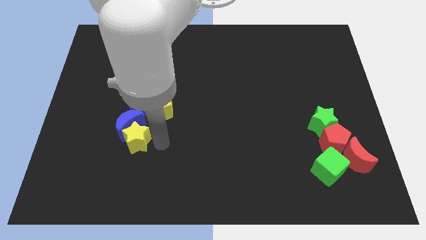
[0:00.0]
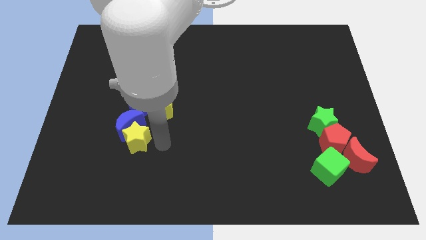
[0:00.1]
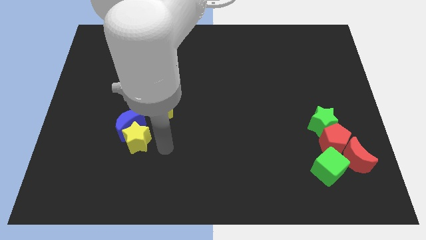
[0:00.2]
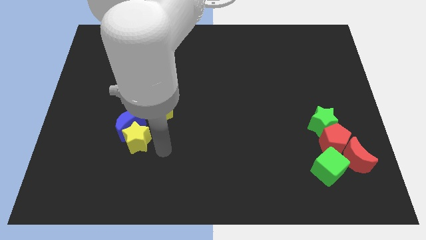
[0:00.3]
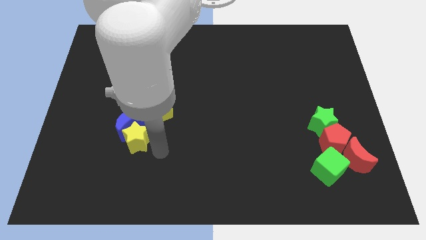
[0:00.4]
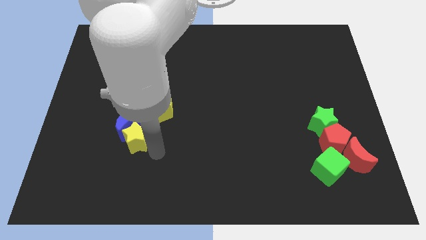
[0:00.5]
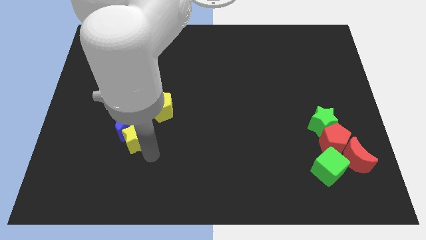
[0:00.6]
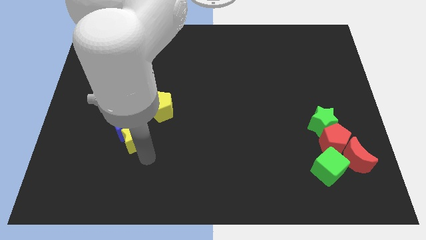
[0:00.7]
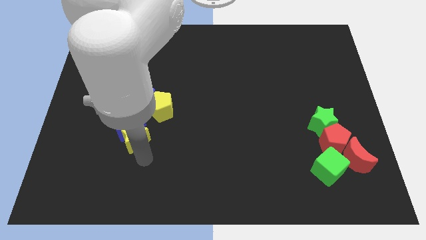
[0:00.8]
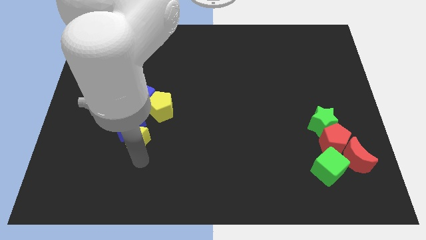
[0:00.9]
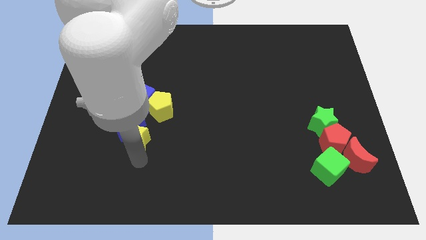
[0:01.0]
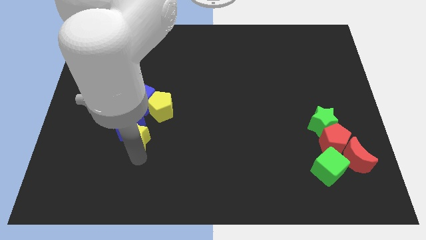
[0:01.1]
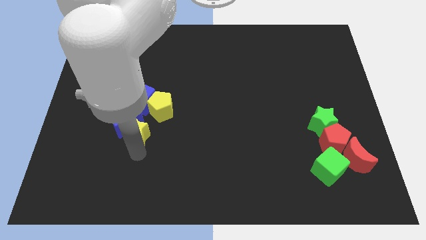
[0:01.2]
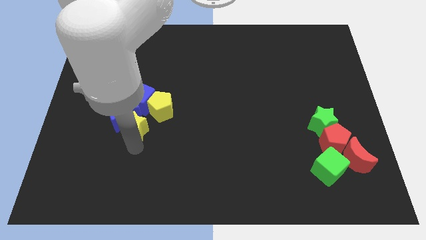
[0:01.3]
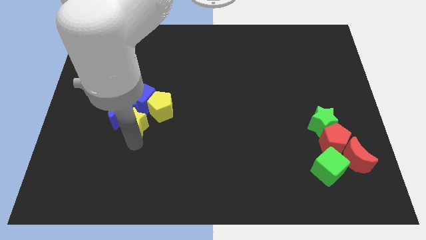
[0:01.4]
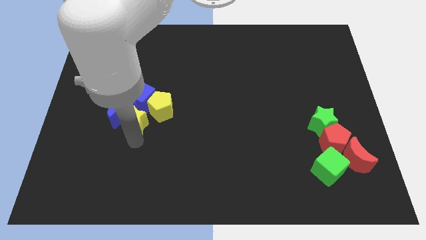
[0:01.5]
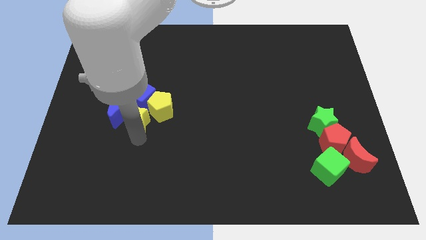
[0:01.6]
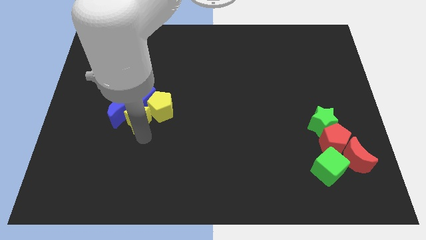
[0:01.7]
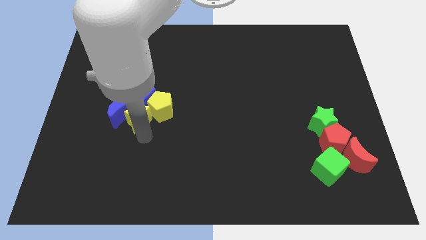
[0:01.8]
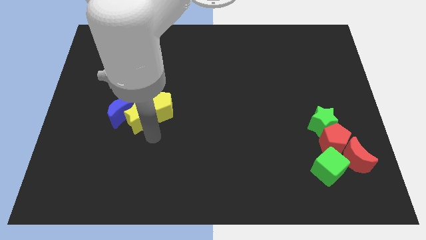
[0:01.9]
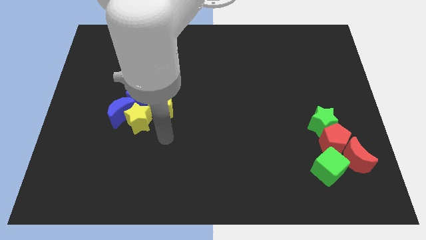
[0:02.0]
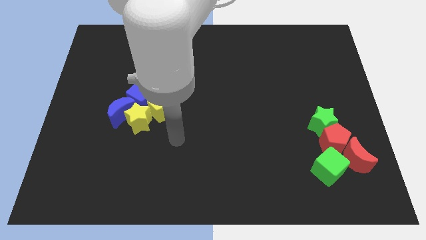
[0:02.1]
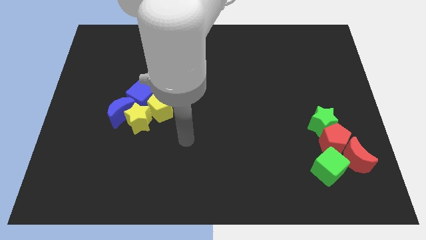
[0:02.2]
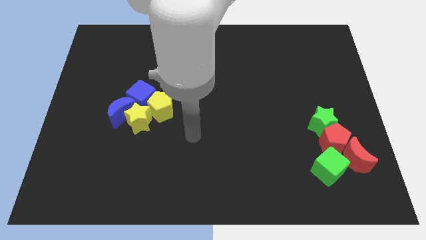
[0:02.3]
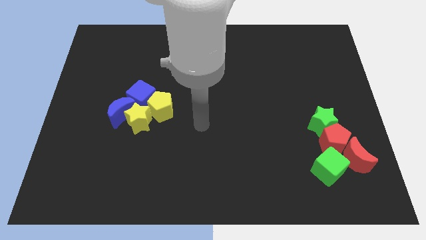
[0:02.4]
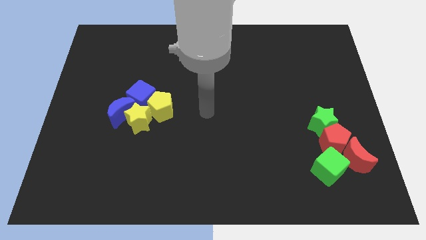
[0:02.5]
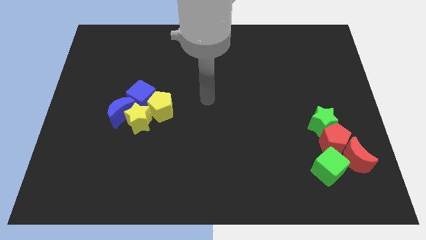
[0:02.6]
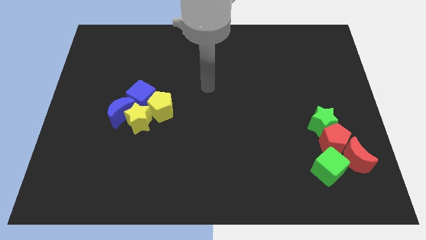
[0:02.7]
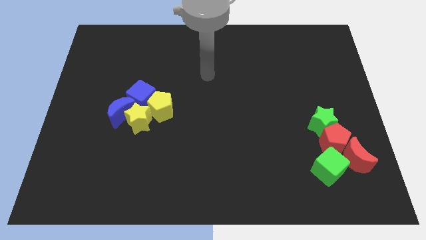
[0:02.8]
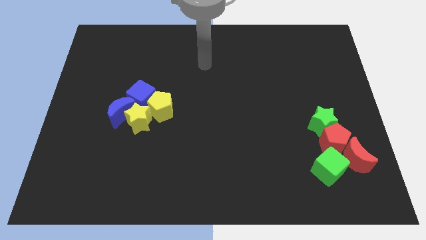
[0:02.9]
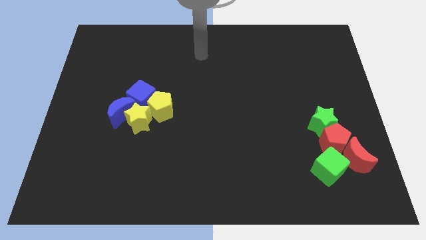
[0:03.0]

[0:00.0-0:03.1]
put the blue blocks and yellow blocks together

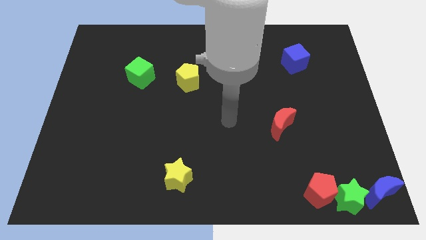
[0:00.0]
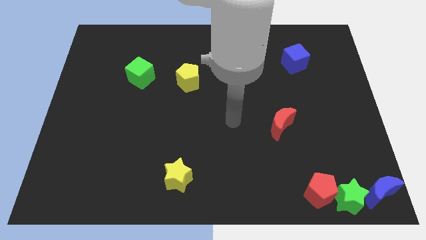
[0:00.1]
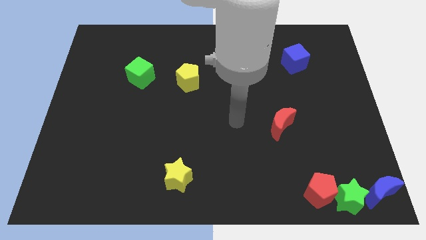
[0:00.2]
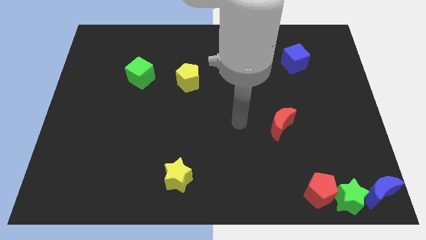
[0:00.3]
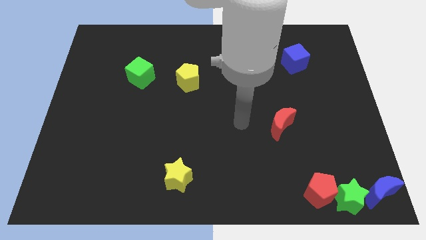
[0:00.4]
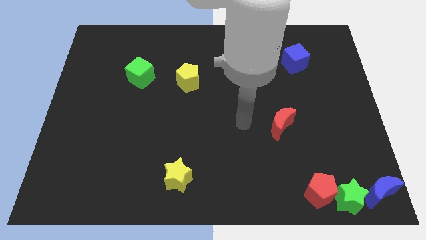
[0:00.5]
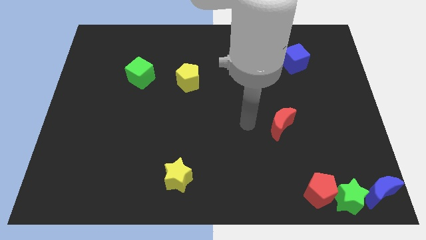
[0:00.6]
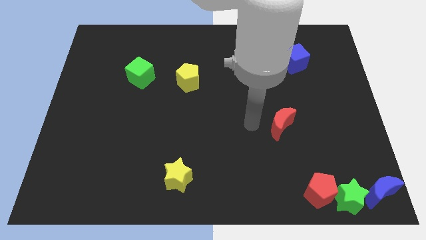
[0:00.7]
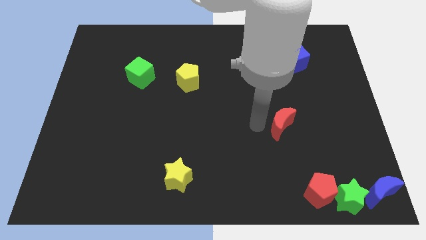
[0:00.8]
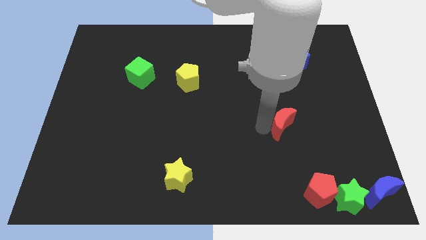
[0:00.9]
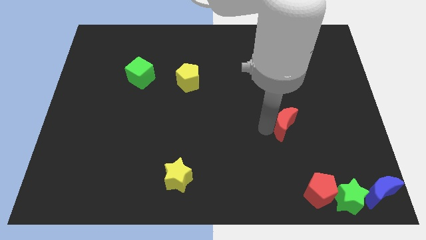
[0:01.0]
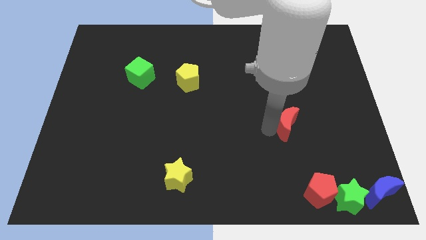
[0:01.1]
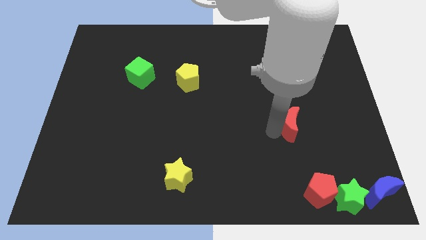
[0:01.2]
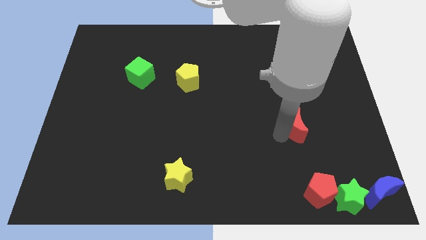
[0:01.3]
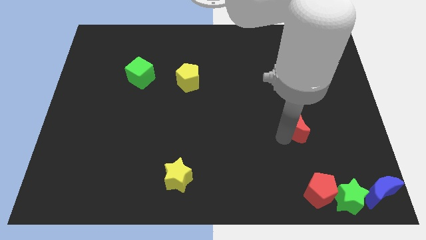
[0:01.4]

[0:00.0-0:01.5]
push the red crescent slightly to the right side of the board

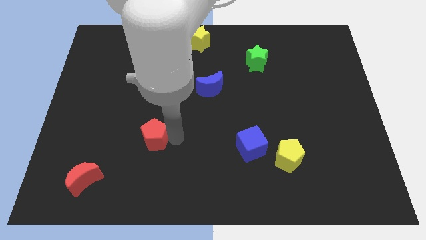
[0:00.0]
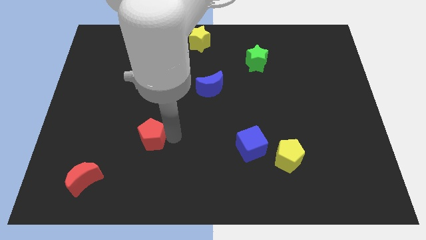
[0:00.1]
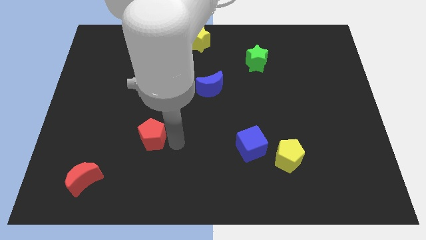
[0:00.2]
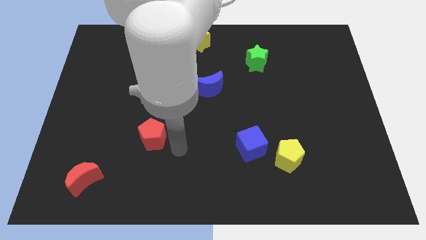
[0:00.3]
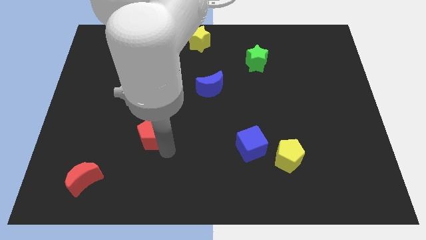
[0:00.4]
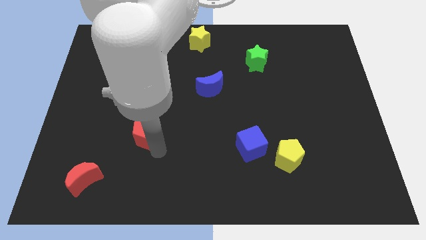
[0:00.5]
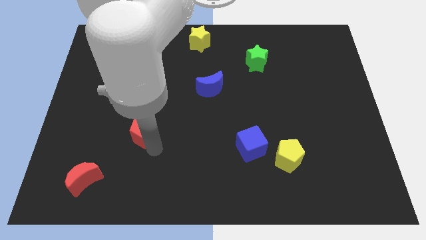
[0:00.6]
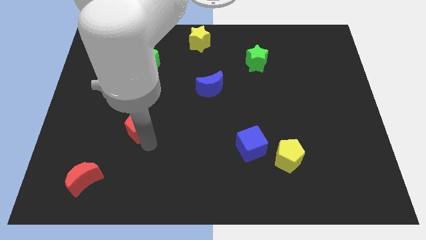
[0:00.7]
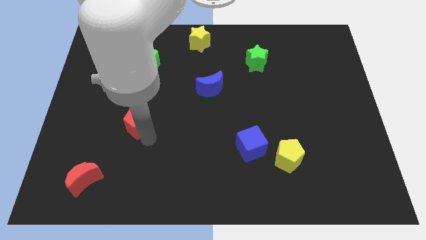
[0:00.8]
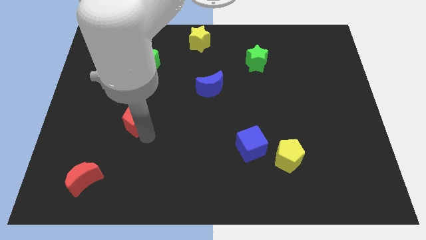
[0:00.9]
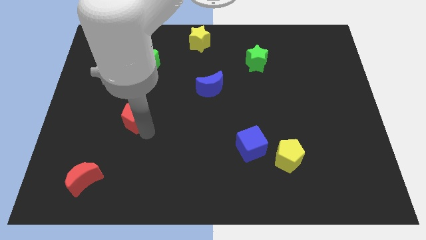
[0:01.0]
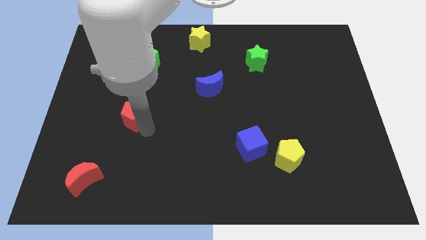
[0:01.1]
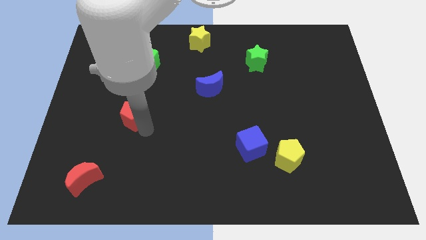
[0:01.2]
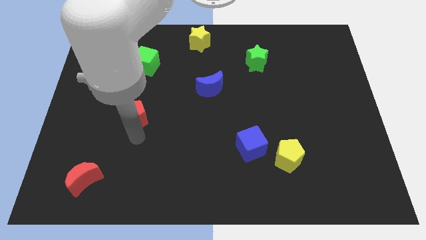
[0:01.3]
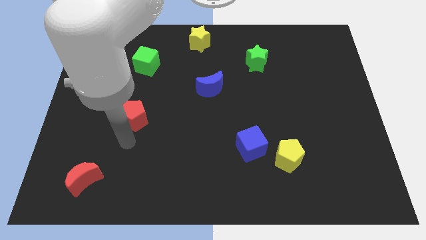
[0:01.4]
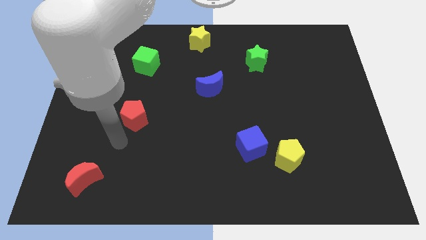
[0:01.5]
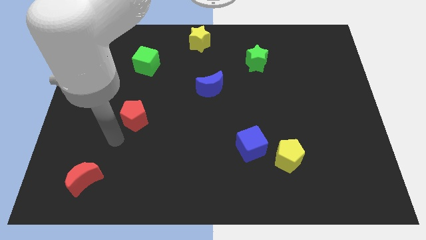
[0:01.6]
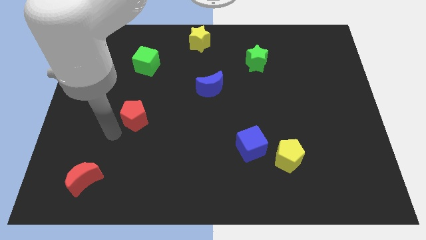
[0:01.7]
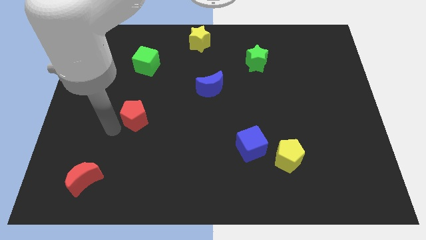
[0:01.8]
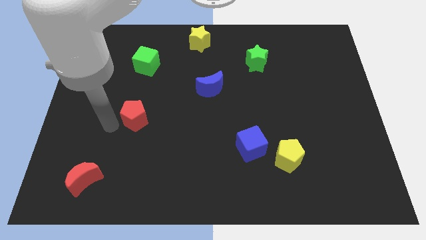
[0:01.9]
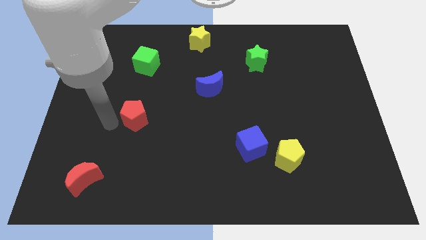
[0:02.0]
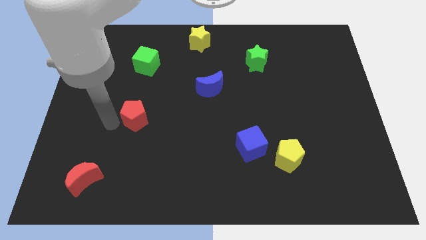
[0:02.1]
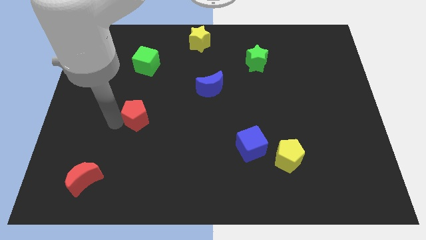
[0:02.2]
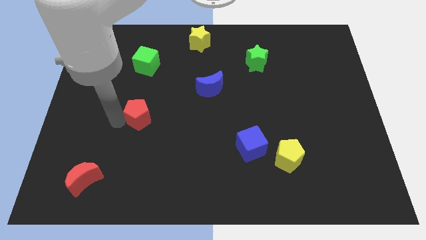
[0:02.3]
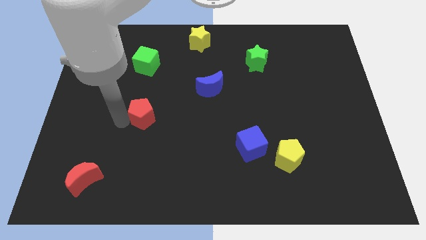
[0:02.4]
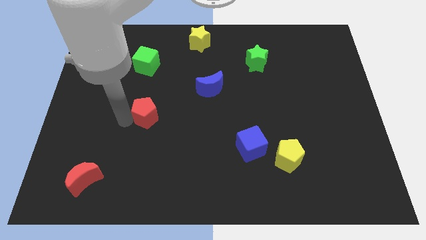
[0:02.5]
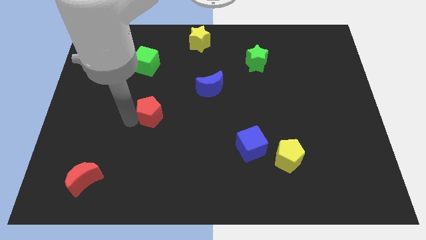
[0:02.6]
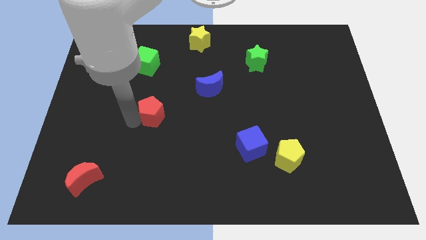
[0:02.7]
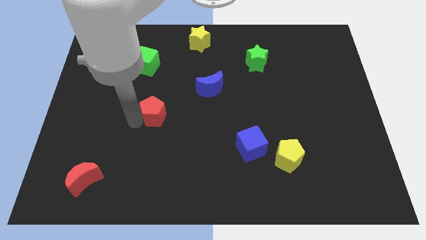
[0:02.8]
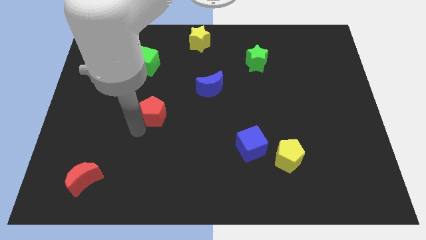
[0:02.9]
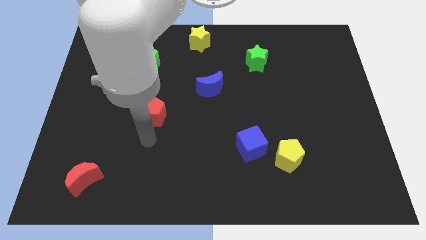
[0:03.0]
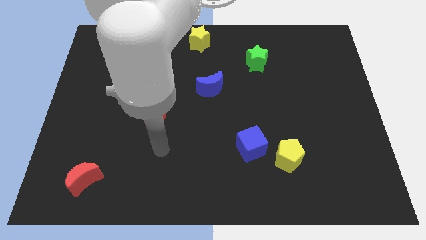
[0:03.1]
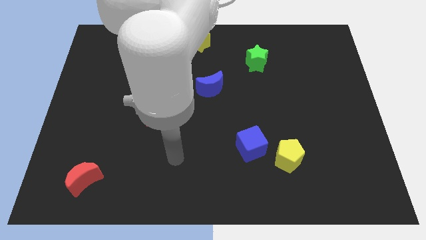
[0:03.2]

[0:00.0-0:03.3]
push the red pentagon towards the center of the board

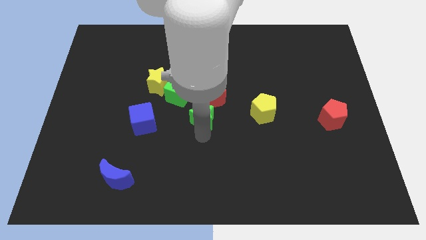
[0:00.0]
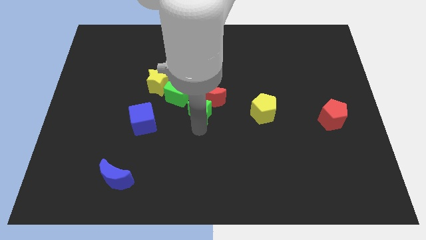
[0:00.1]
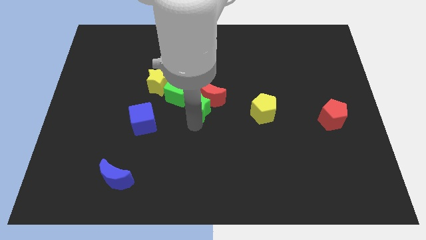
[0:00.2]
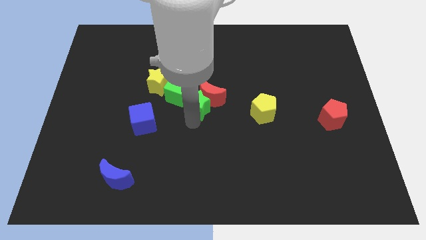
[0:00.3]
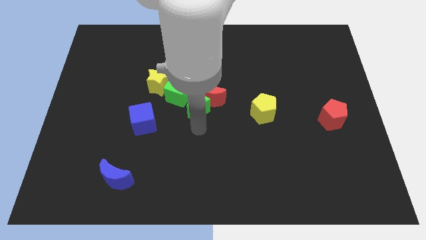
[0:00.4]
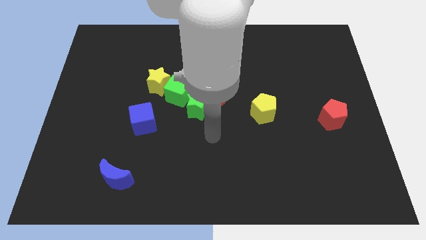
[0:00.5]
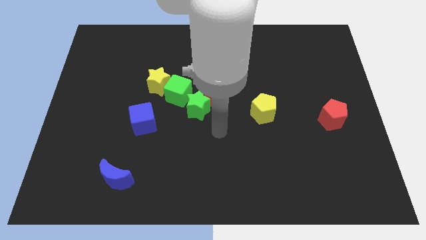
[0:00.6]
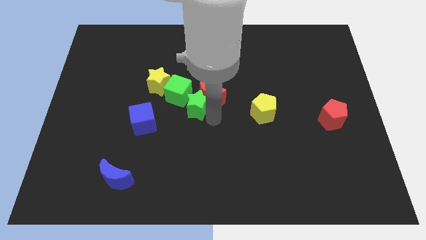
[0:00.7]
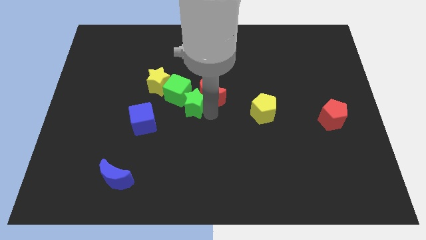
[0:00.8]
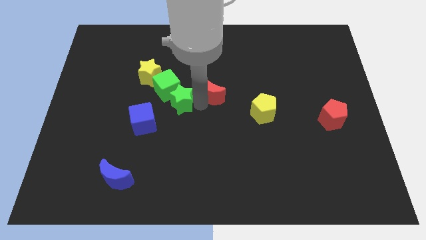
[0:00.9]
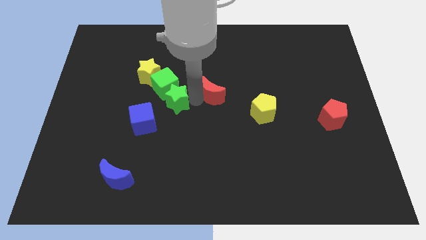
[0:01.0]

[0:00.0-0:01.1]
take the green star into the green cube
